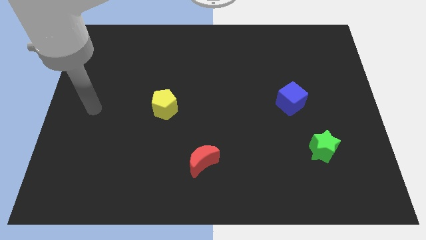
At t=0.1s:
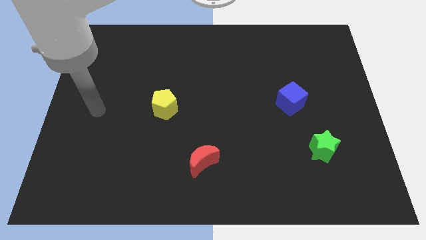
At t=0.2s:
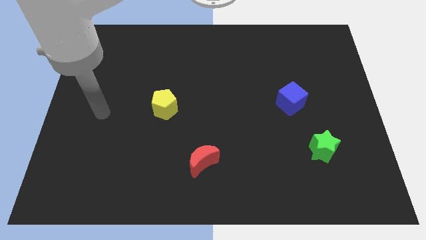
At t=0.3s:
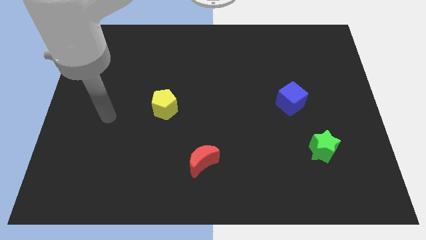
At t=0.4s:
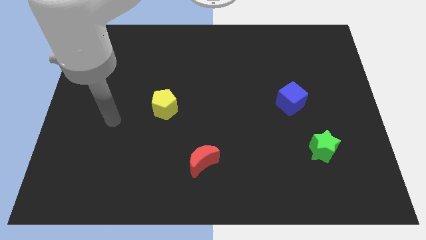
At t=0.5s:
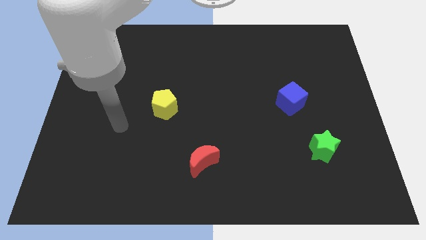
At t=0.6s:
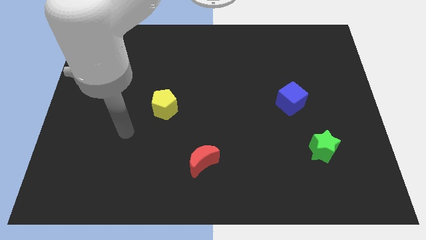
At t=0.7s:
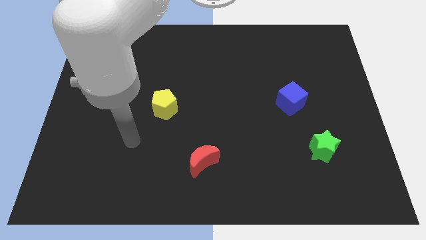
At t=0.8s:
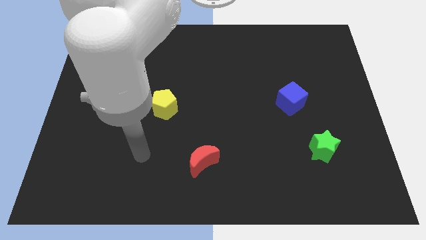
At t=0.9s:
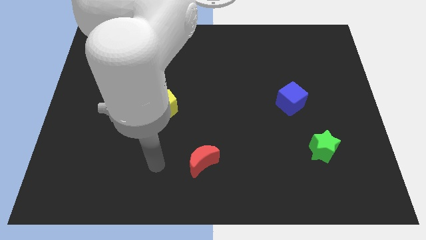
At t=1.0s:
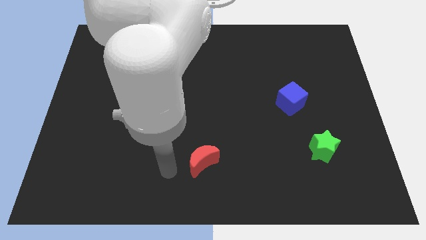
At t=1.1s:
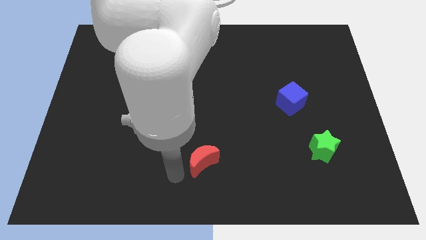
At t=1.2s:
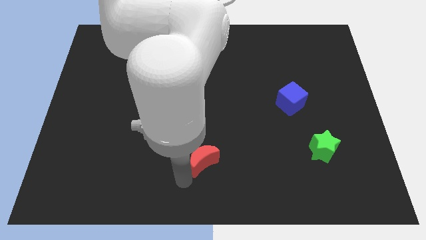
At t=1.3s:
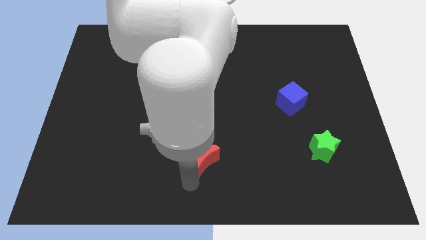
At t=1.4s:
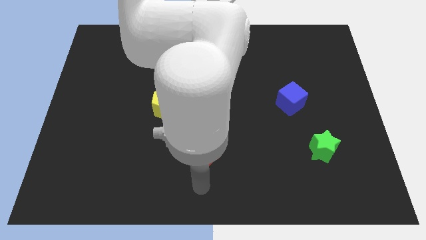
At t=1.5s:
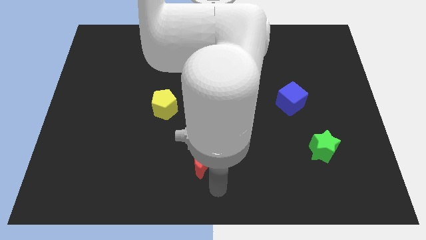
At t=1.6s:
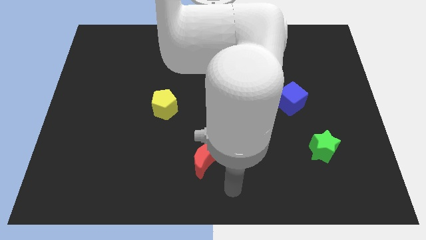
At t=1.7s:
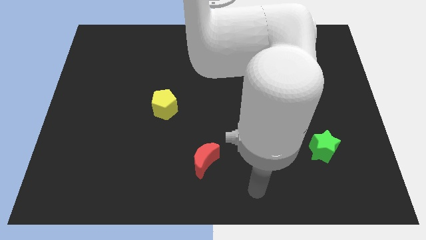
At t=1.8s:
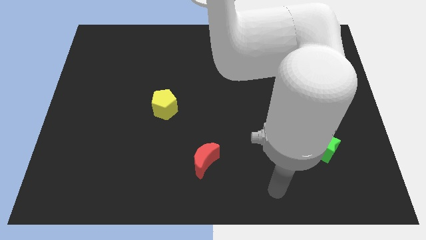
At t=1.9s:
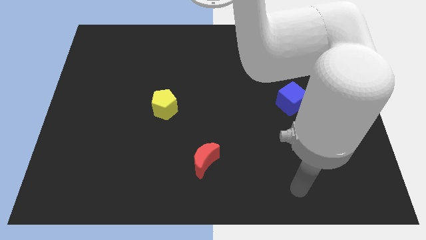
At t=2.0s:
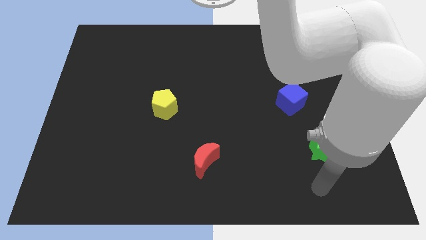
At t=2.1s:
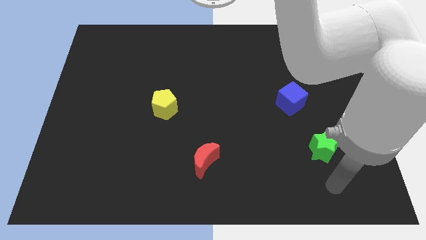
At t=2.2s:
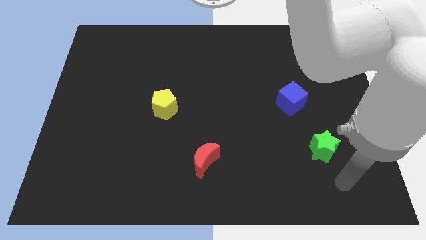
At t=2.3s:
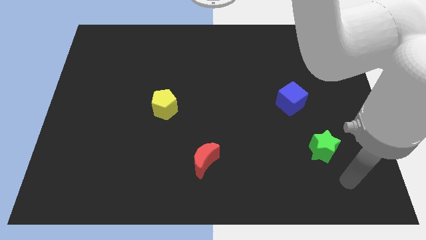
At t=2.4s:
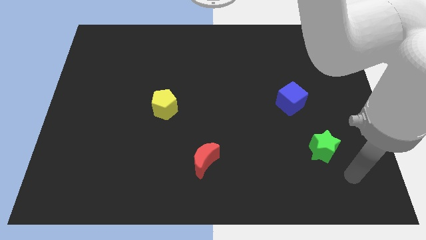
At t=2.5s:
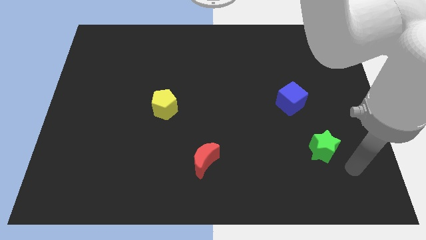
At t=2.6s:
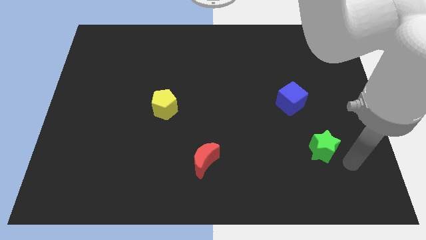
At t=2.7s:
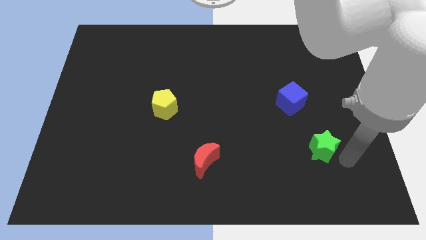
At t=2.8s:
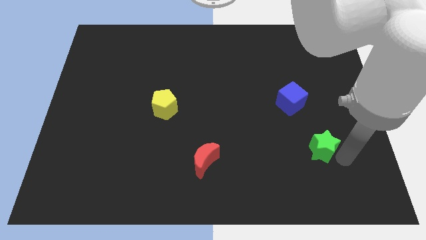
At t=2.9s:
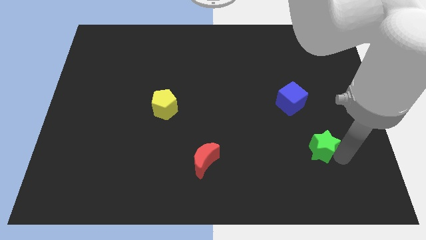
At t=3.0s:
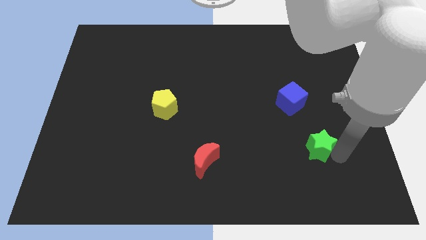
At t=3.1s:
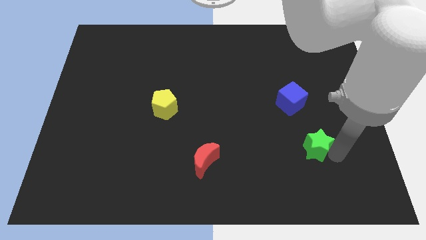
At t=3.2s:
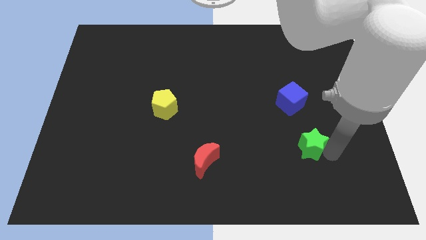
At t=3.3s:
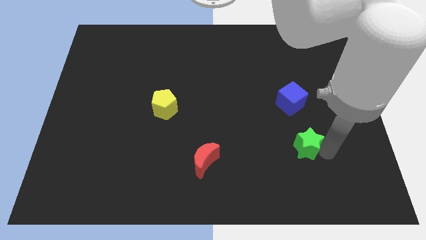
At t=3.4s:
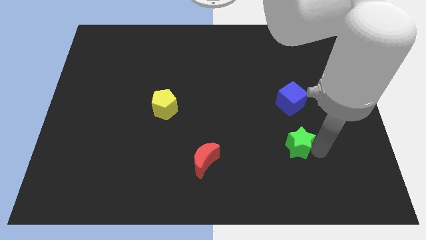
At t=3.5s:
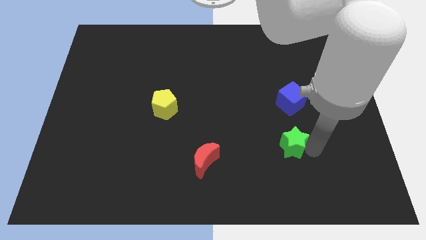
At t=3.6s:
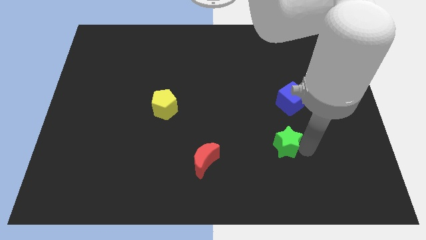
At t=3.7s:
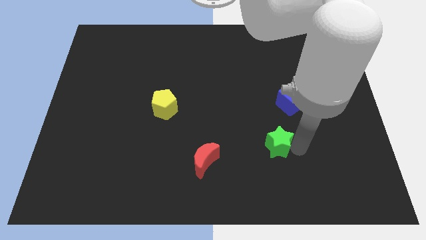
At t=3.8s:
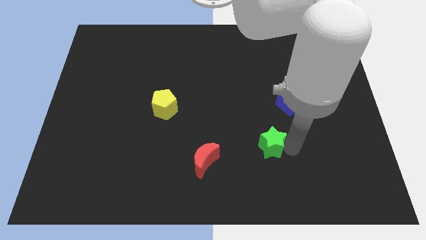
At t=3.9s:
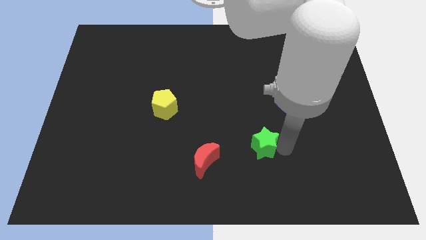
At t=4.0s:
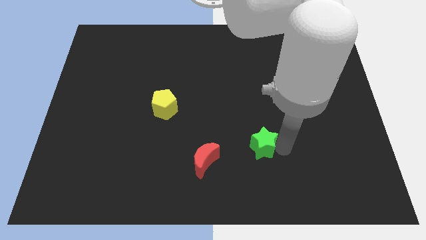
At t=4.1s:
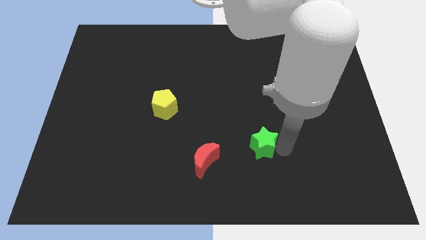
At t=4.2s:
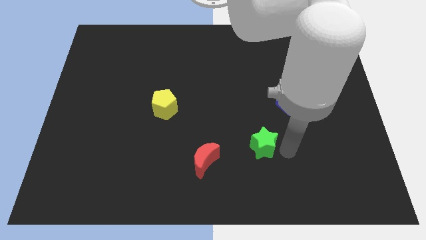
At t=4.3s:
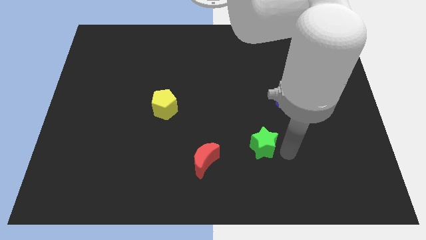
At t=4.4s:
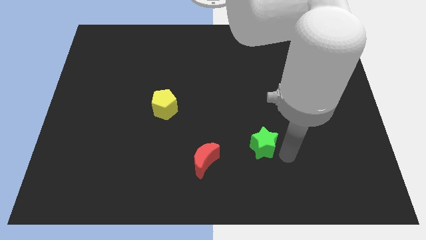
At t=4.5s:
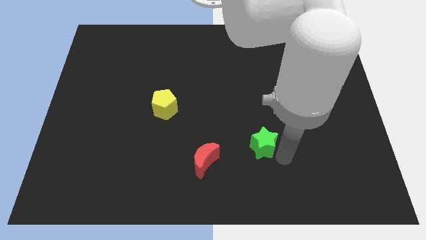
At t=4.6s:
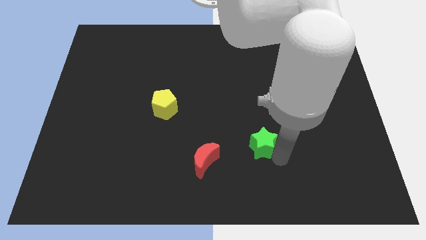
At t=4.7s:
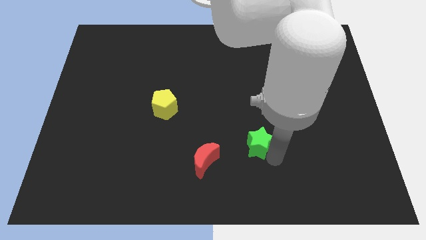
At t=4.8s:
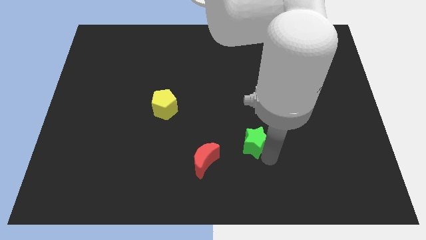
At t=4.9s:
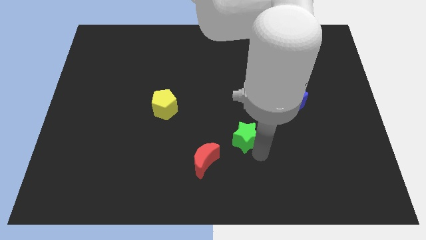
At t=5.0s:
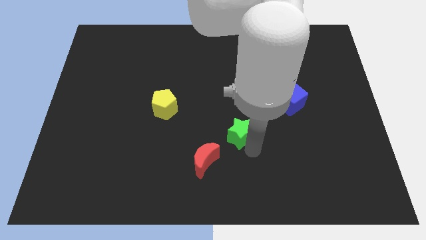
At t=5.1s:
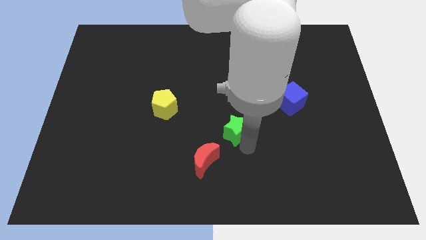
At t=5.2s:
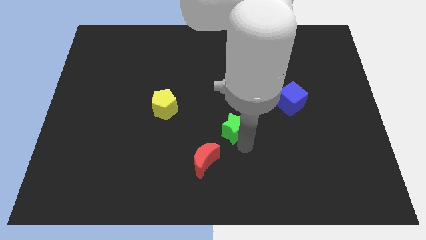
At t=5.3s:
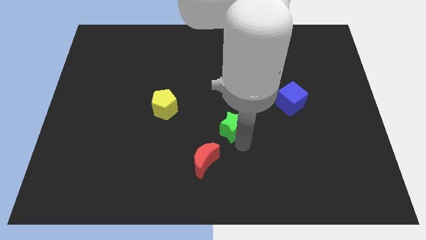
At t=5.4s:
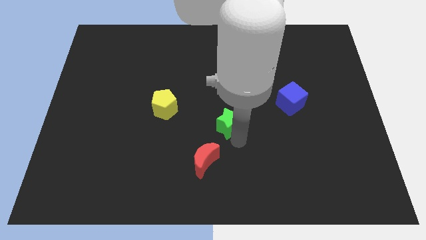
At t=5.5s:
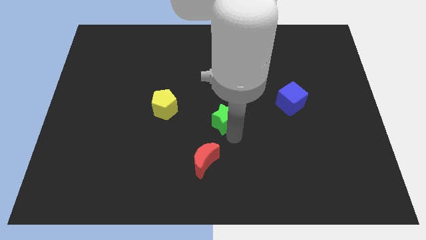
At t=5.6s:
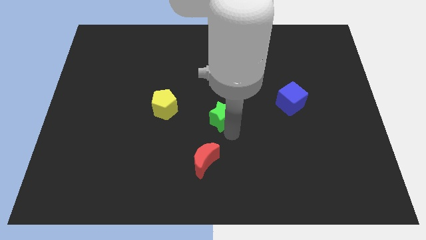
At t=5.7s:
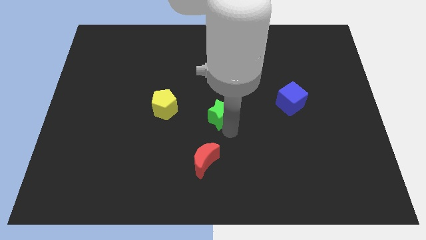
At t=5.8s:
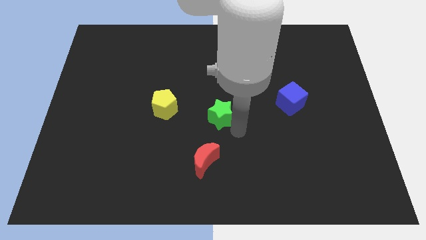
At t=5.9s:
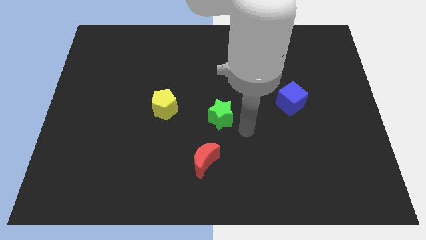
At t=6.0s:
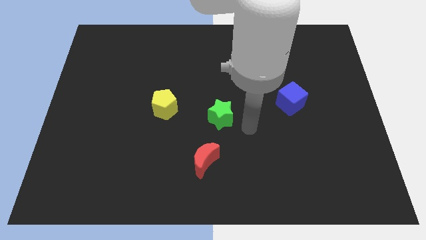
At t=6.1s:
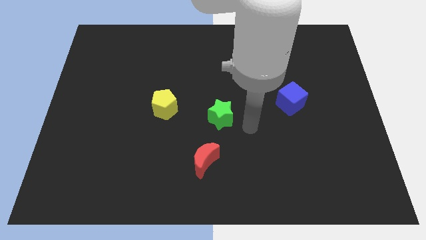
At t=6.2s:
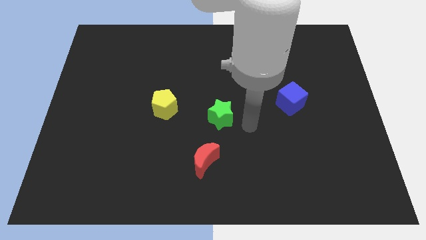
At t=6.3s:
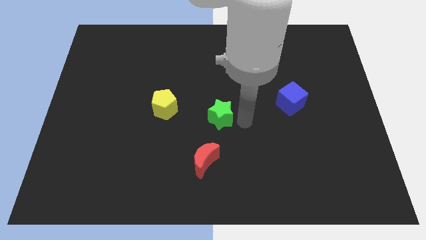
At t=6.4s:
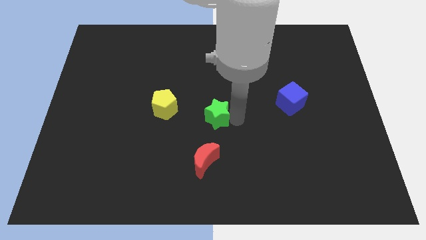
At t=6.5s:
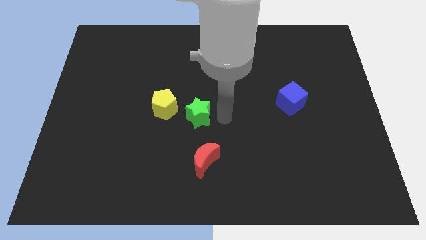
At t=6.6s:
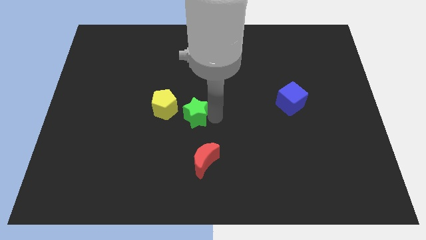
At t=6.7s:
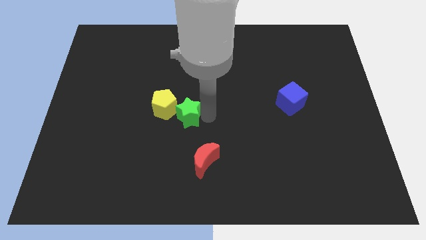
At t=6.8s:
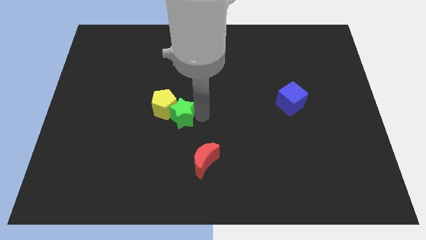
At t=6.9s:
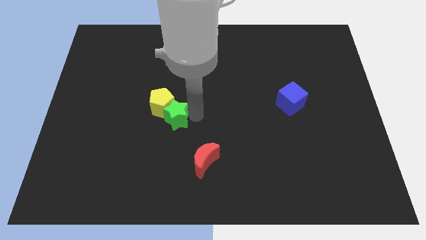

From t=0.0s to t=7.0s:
slide the green block to the pentagon

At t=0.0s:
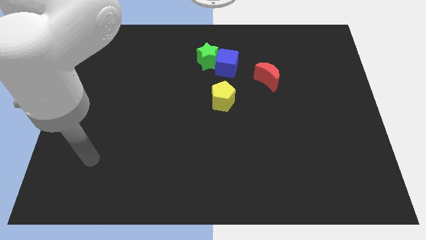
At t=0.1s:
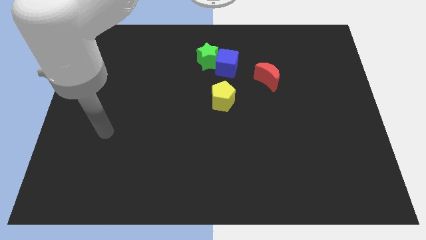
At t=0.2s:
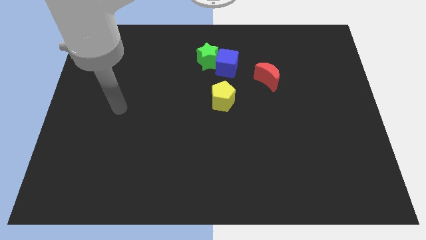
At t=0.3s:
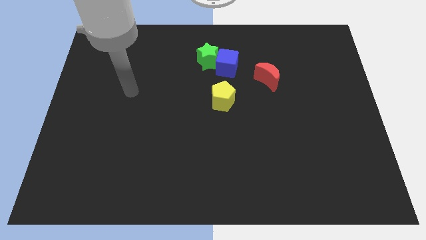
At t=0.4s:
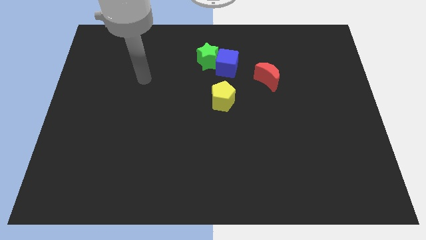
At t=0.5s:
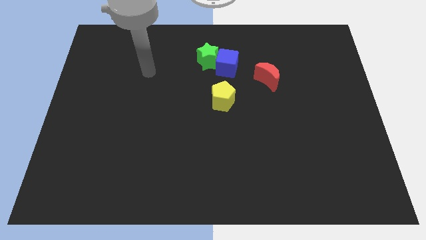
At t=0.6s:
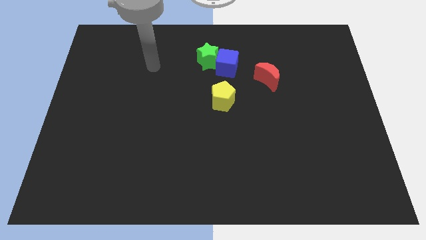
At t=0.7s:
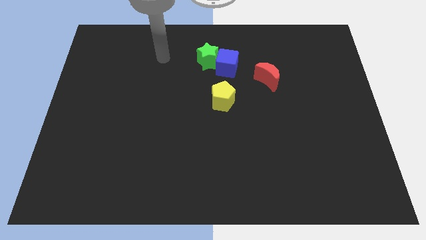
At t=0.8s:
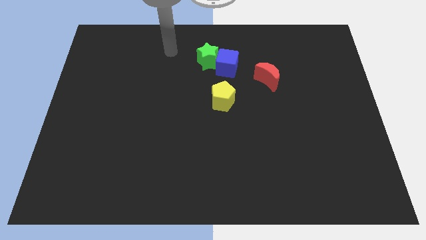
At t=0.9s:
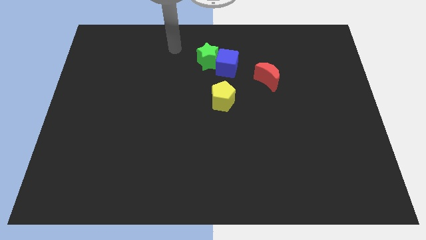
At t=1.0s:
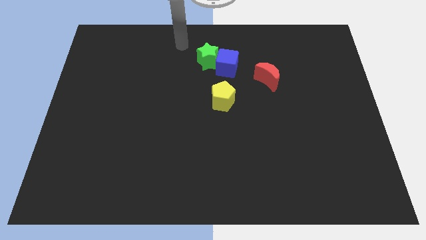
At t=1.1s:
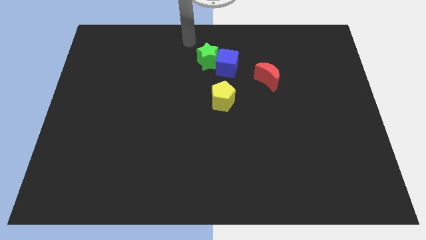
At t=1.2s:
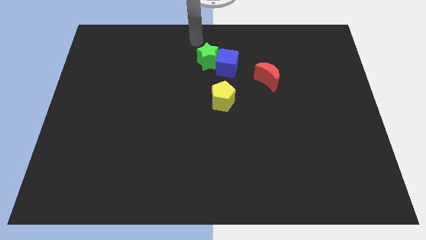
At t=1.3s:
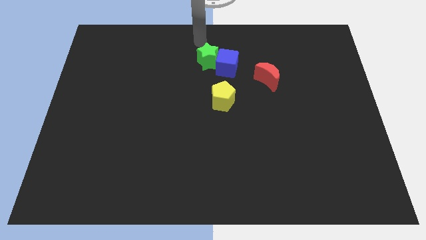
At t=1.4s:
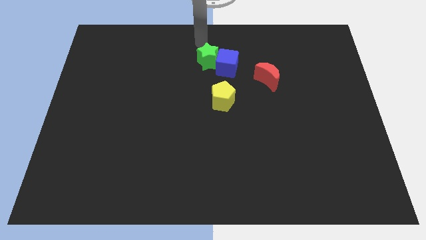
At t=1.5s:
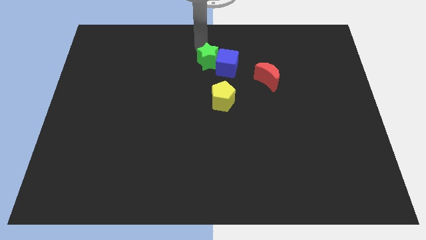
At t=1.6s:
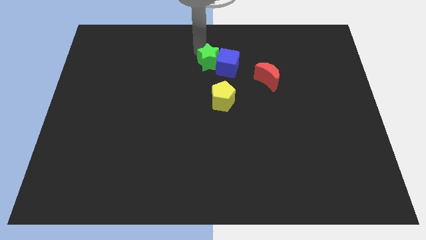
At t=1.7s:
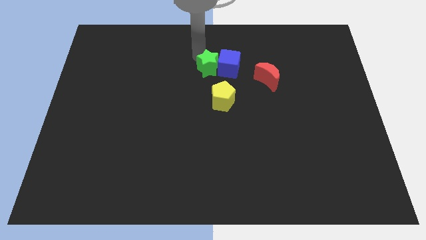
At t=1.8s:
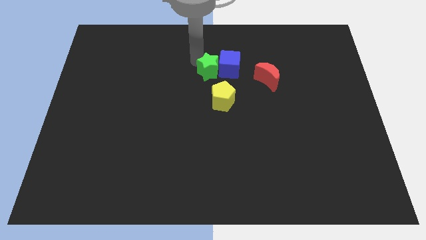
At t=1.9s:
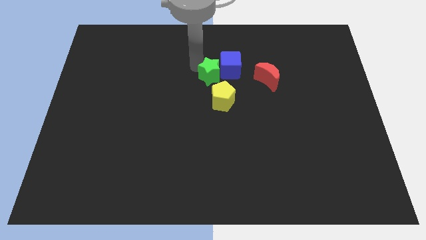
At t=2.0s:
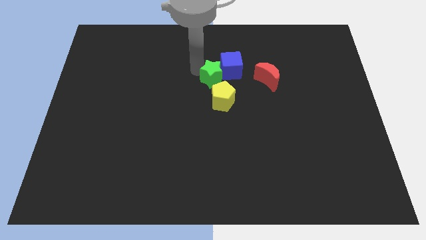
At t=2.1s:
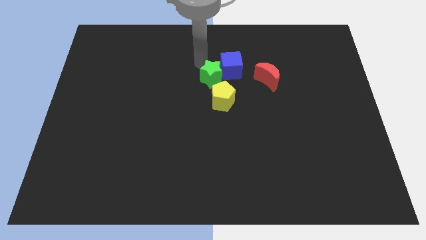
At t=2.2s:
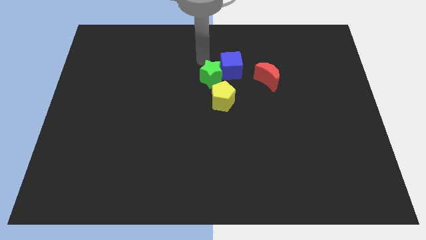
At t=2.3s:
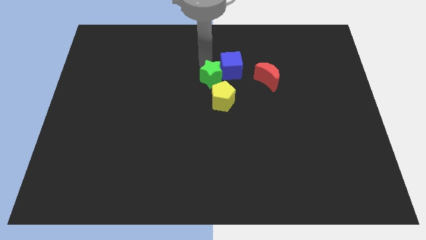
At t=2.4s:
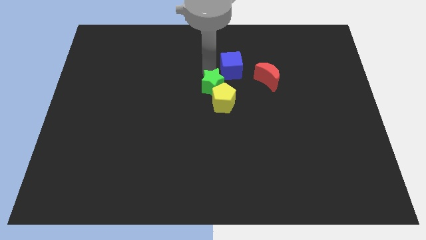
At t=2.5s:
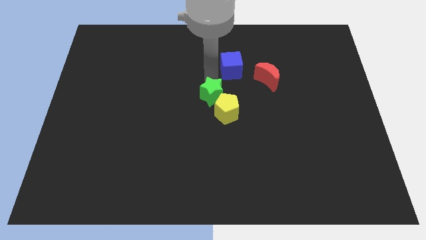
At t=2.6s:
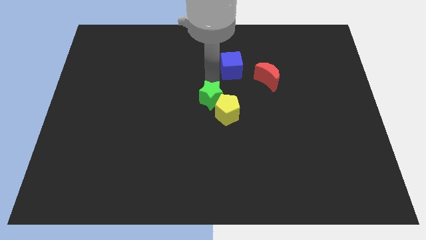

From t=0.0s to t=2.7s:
move the green block to the yellow pentagon
